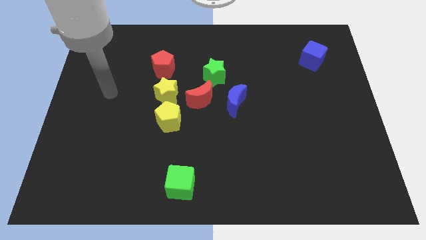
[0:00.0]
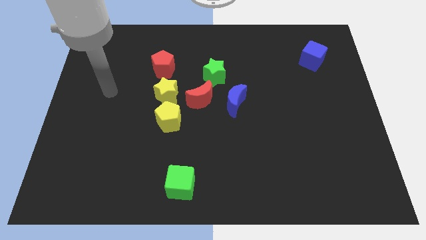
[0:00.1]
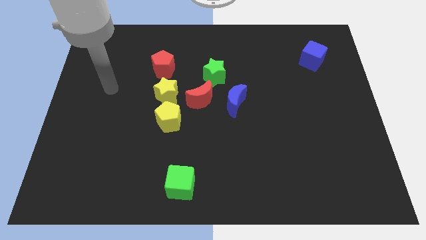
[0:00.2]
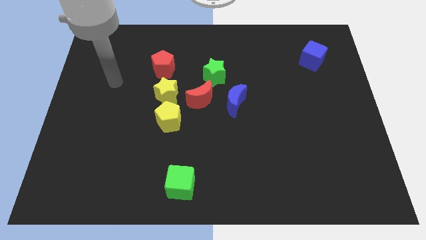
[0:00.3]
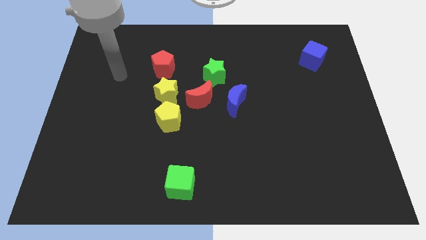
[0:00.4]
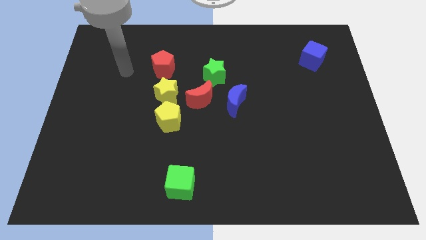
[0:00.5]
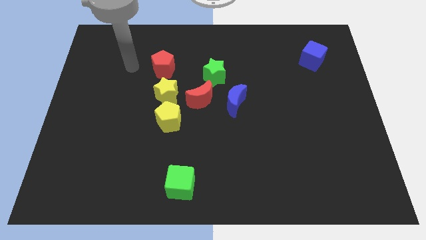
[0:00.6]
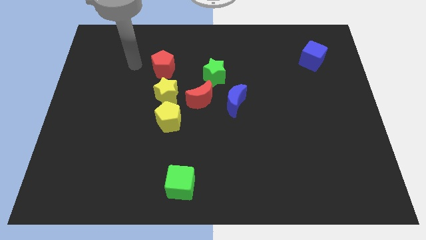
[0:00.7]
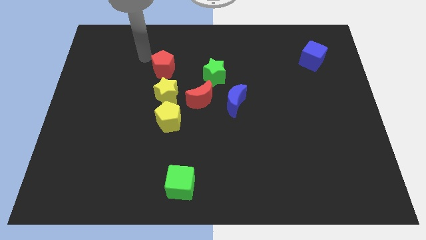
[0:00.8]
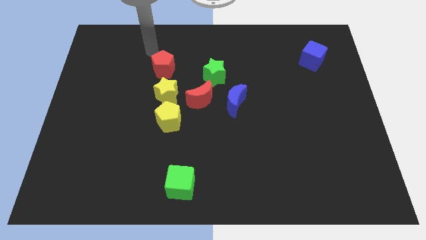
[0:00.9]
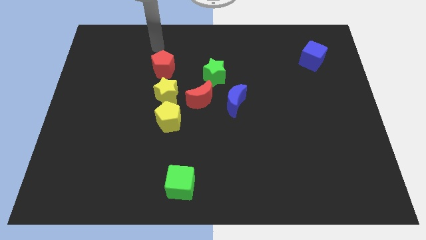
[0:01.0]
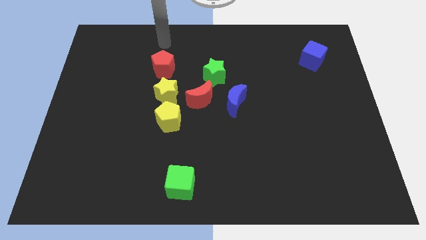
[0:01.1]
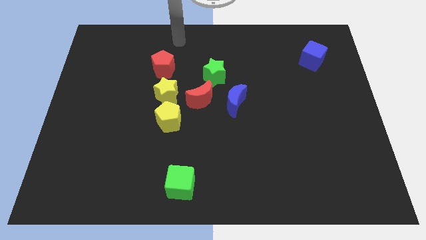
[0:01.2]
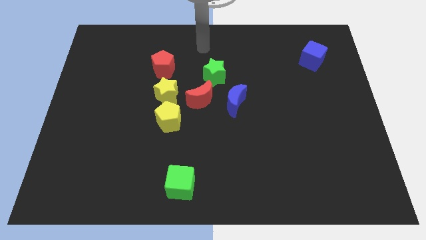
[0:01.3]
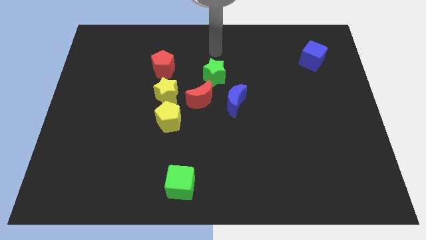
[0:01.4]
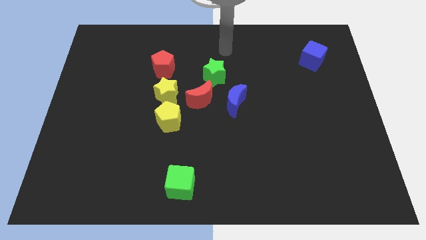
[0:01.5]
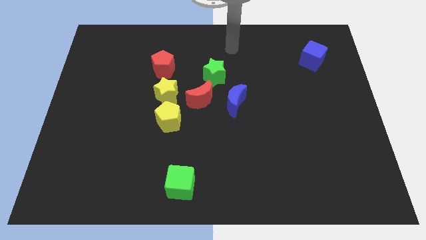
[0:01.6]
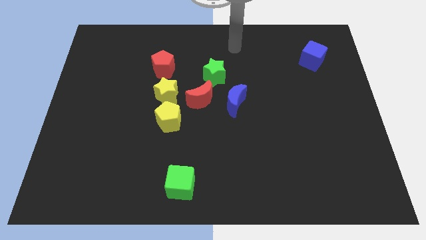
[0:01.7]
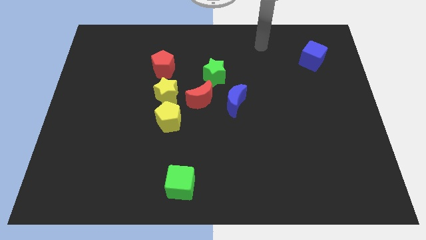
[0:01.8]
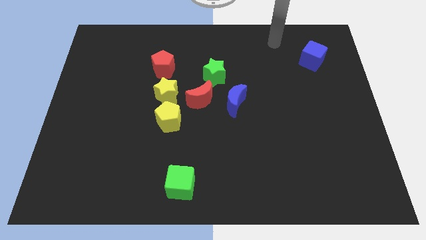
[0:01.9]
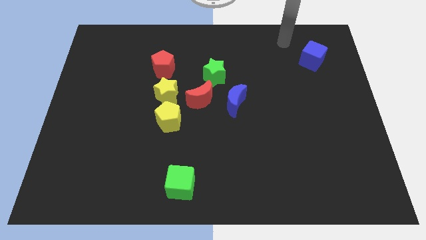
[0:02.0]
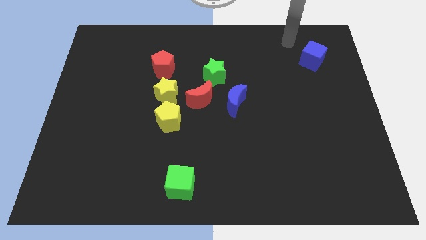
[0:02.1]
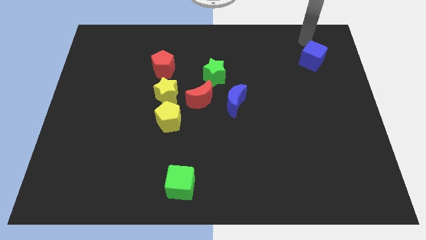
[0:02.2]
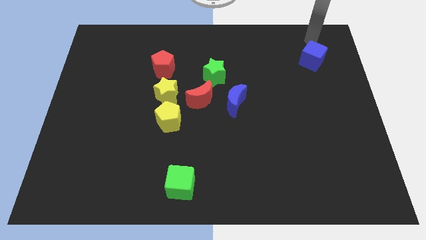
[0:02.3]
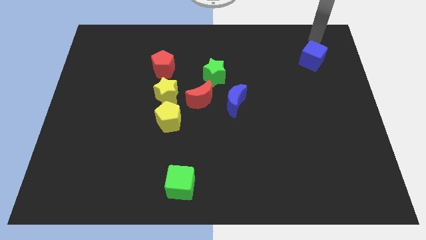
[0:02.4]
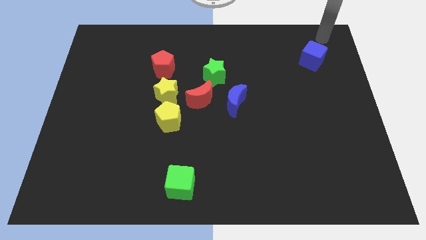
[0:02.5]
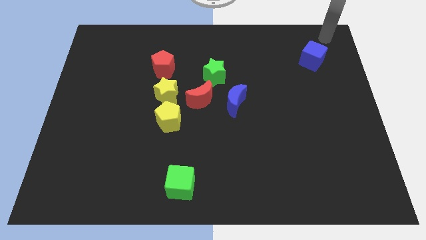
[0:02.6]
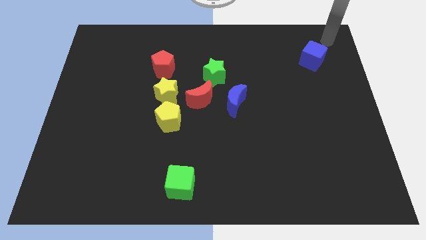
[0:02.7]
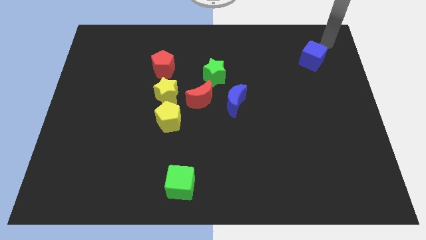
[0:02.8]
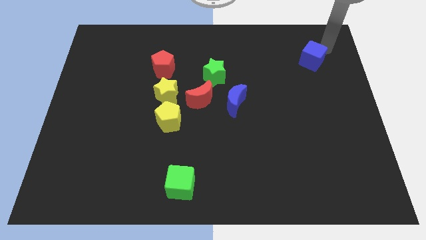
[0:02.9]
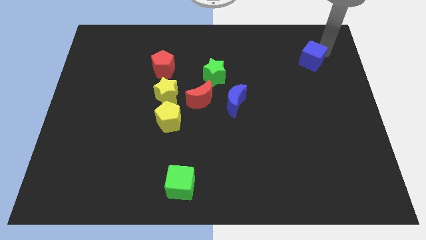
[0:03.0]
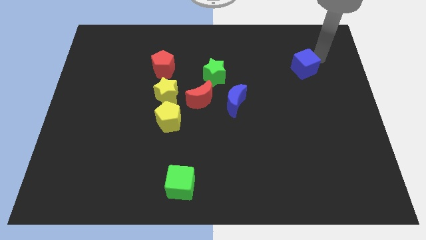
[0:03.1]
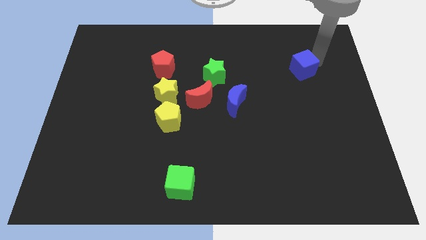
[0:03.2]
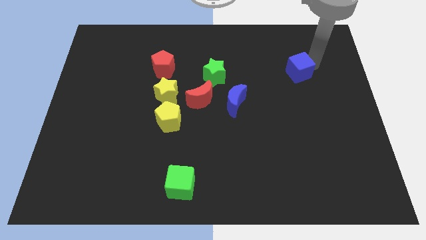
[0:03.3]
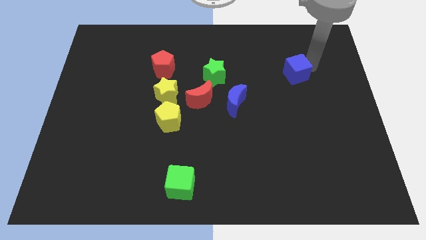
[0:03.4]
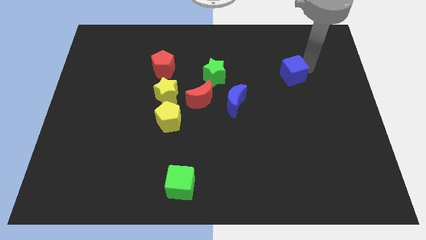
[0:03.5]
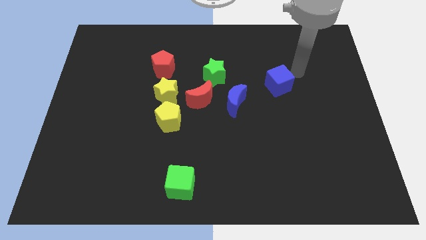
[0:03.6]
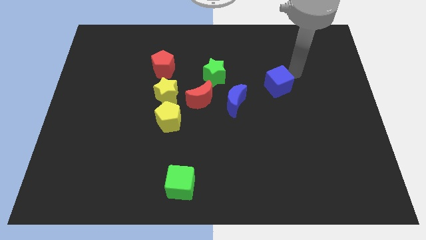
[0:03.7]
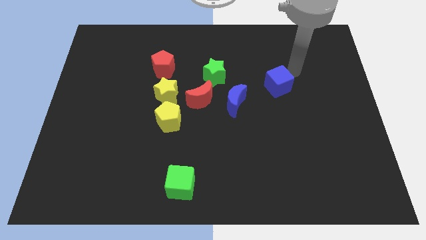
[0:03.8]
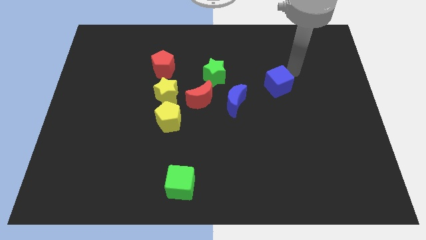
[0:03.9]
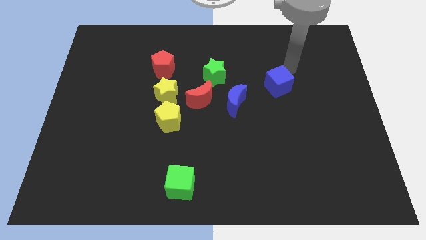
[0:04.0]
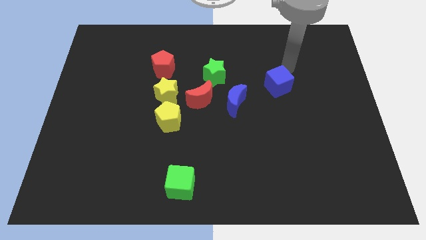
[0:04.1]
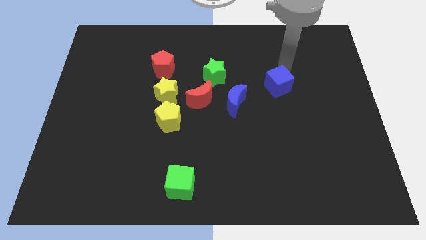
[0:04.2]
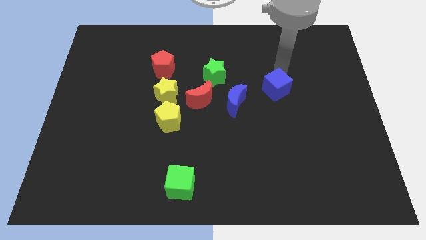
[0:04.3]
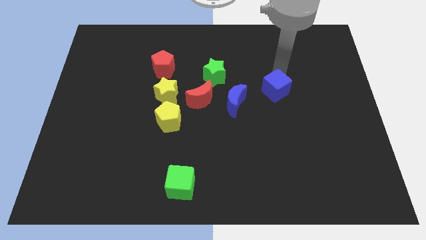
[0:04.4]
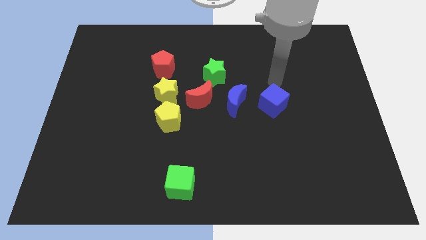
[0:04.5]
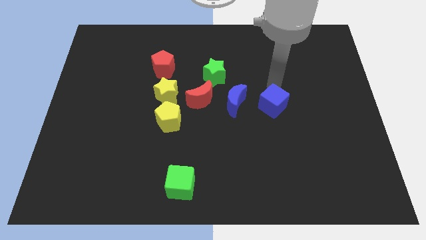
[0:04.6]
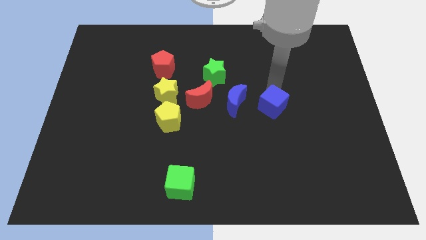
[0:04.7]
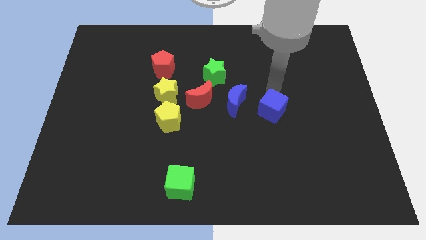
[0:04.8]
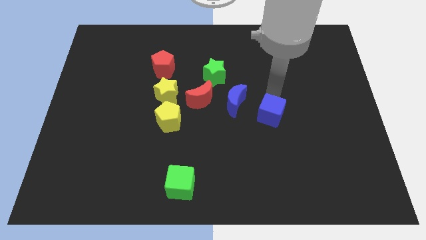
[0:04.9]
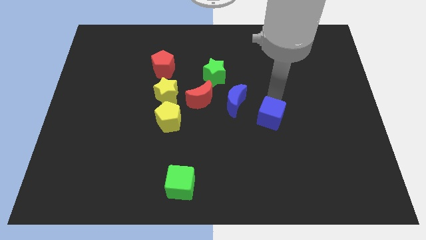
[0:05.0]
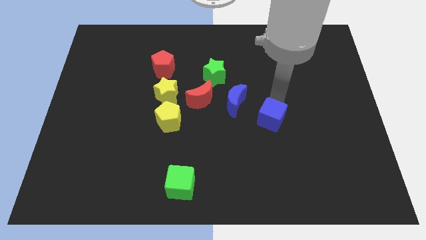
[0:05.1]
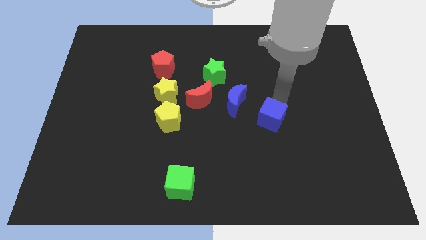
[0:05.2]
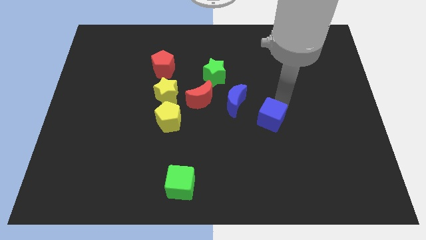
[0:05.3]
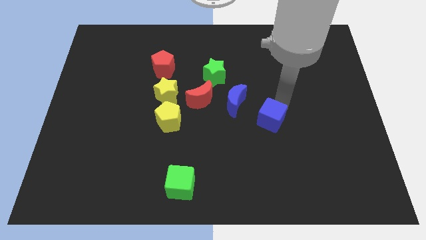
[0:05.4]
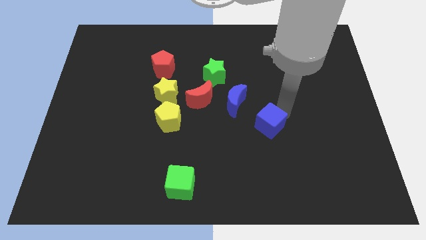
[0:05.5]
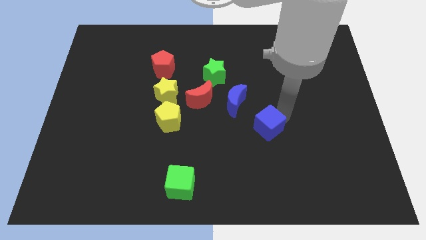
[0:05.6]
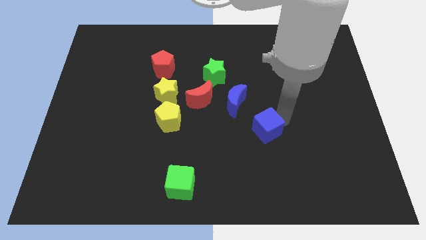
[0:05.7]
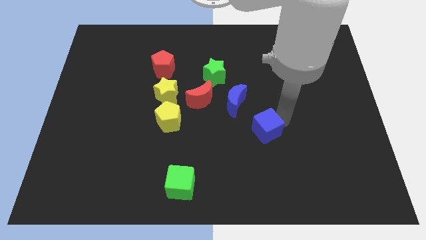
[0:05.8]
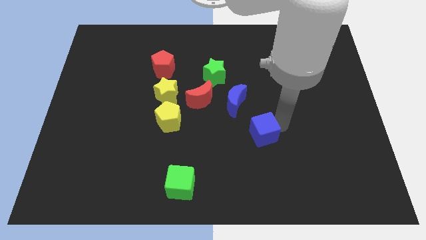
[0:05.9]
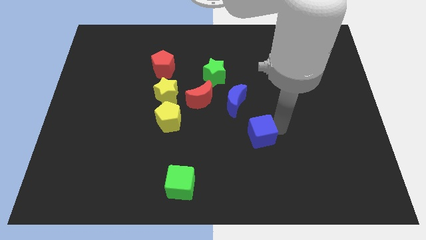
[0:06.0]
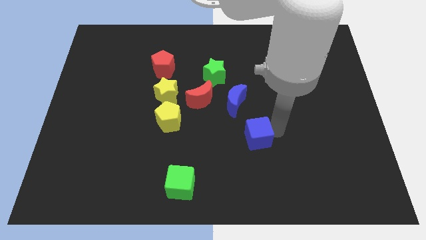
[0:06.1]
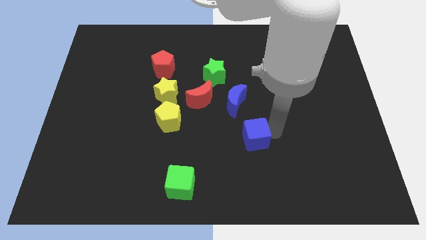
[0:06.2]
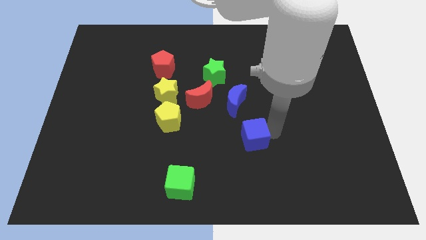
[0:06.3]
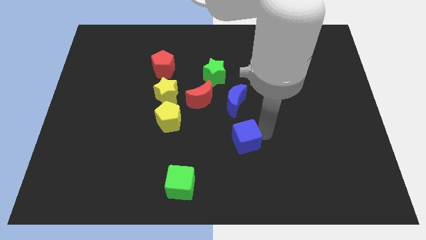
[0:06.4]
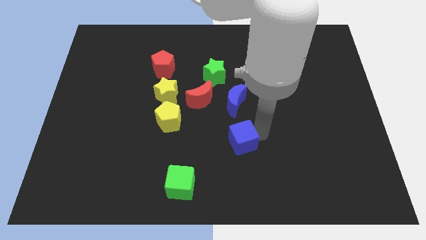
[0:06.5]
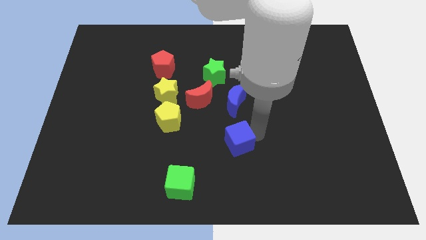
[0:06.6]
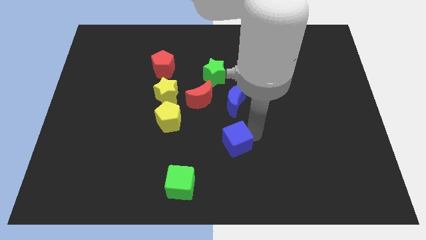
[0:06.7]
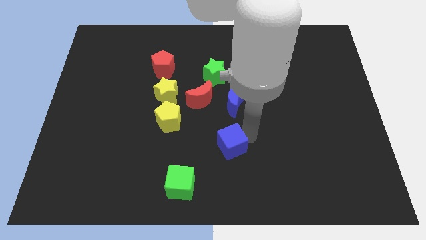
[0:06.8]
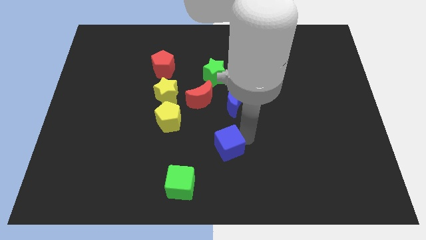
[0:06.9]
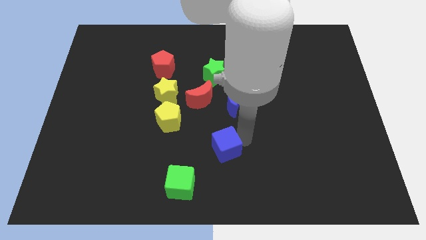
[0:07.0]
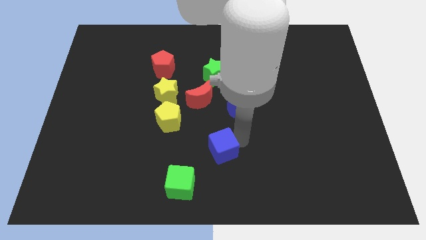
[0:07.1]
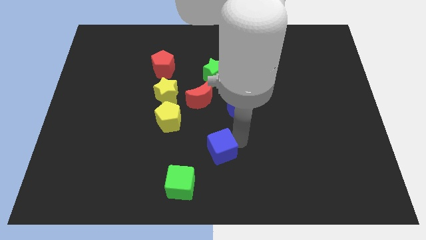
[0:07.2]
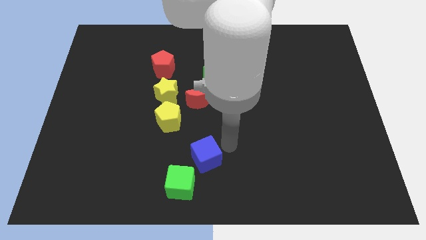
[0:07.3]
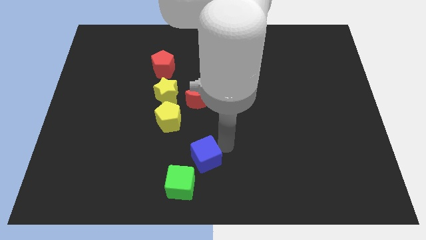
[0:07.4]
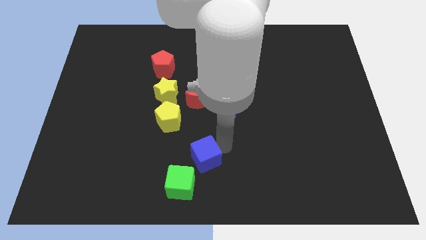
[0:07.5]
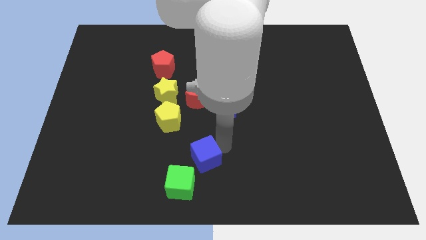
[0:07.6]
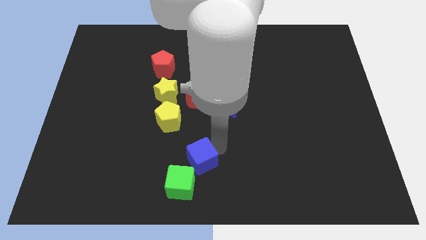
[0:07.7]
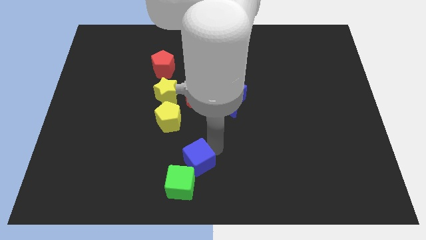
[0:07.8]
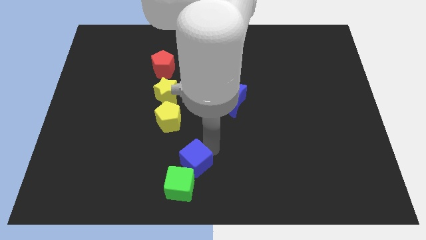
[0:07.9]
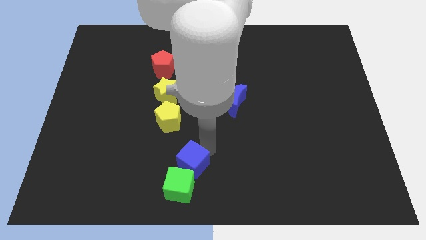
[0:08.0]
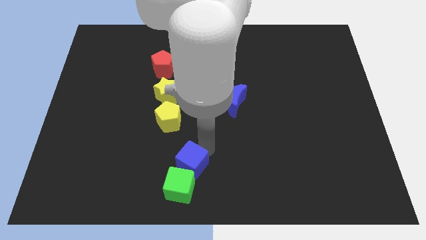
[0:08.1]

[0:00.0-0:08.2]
push the blue cube close to the green cube
